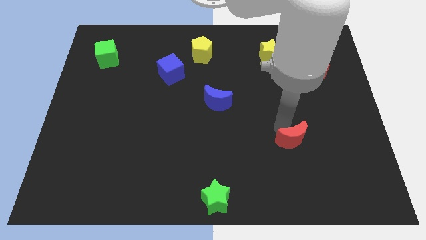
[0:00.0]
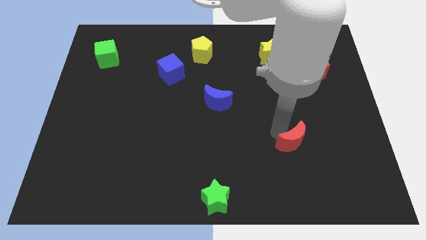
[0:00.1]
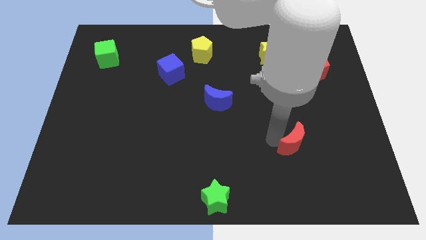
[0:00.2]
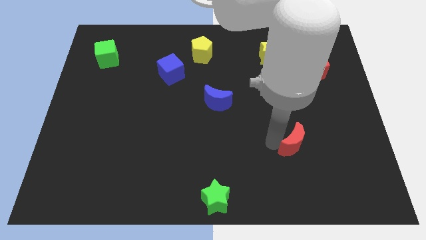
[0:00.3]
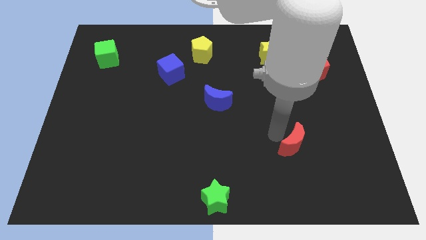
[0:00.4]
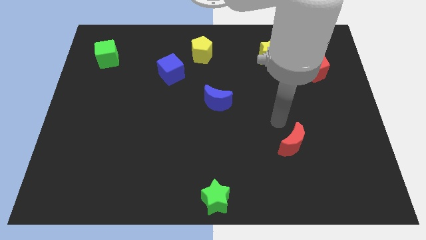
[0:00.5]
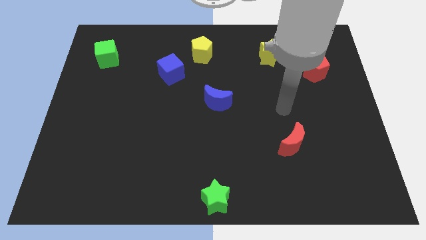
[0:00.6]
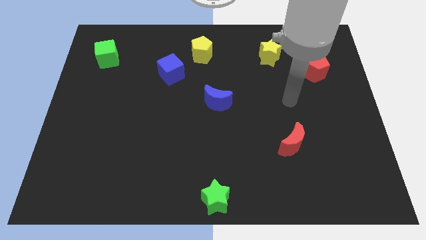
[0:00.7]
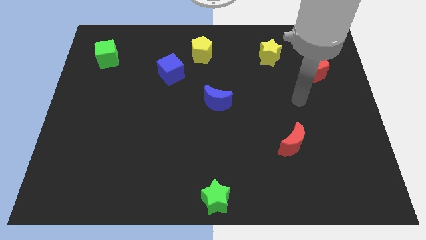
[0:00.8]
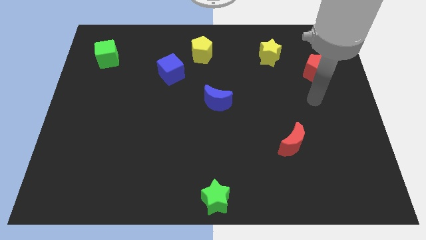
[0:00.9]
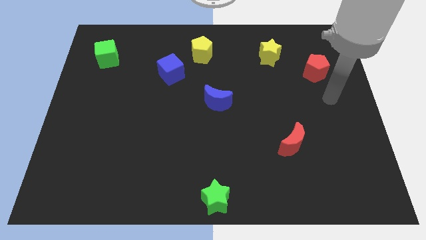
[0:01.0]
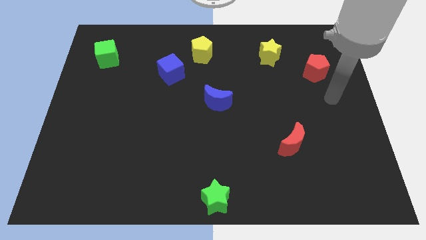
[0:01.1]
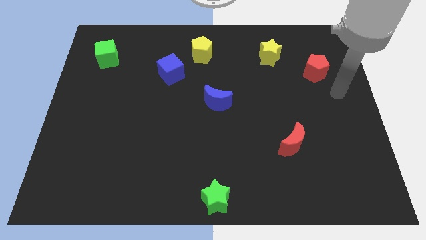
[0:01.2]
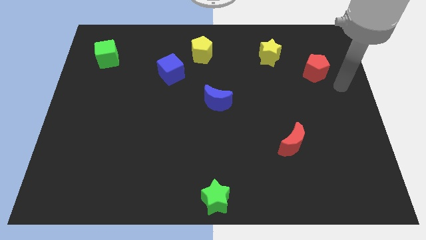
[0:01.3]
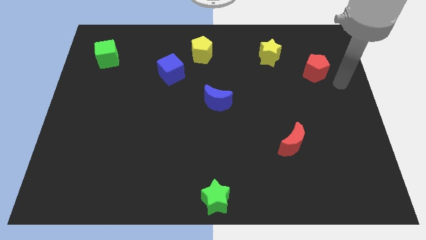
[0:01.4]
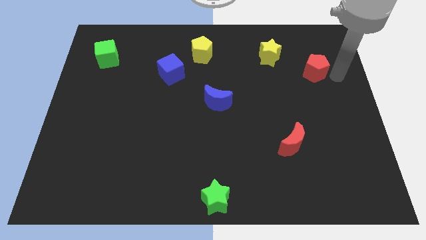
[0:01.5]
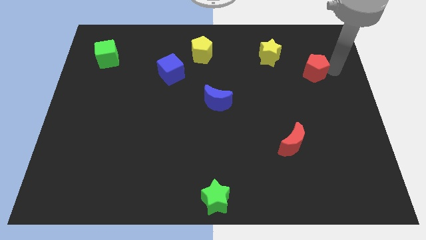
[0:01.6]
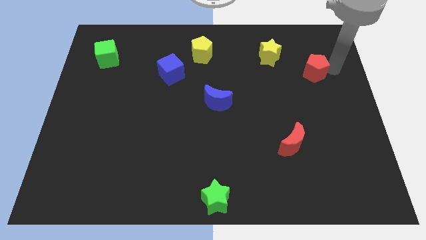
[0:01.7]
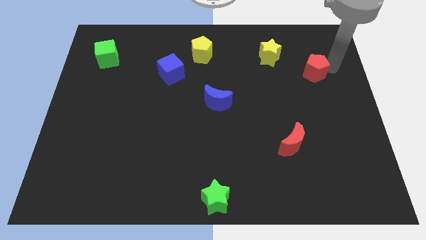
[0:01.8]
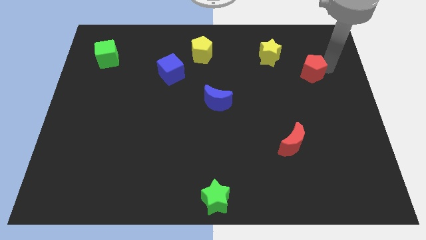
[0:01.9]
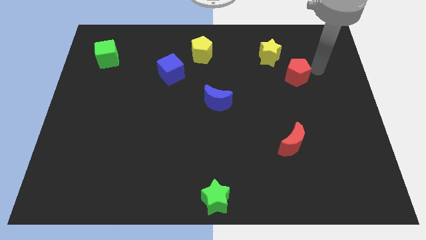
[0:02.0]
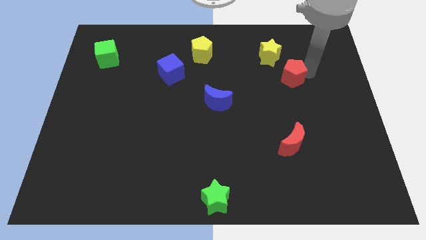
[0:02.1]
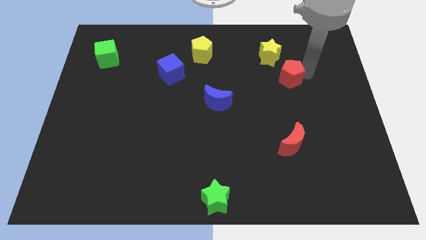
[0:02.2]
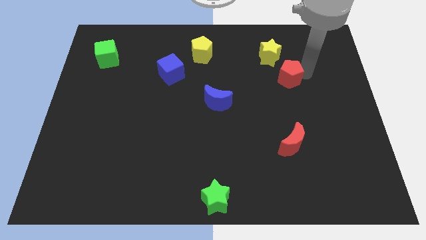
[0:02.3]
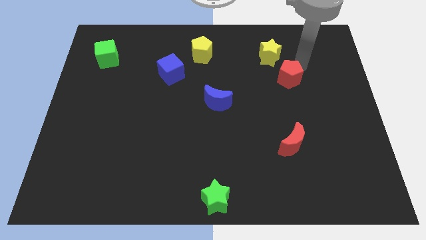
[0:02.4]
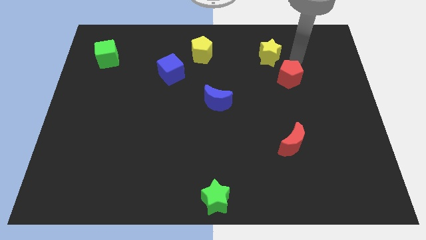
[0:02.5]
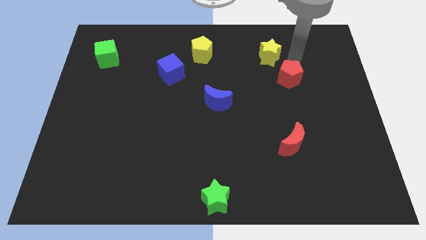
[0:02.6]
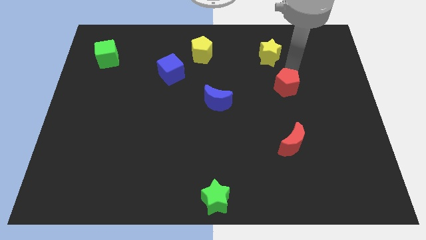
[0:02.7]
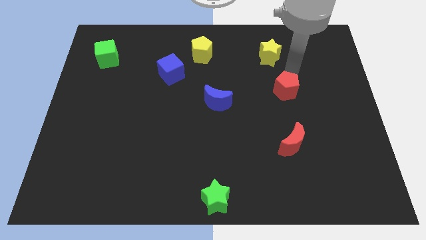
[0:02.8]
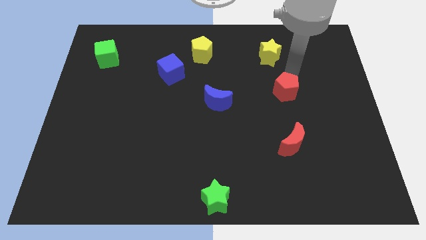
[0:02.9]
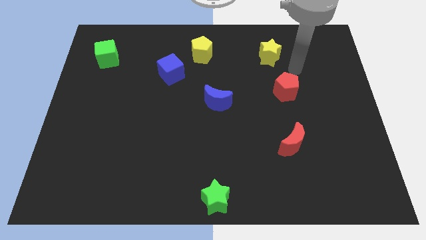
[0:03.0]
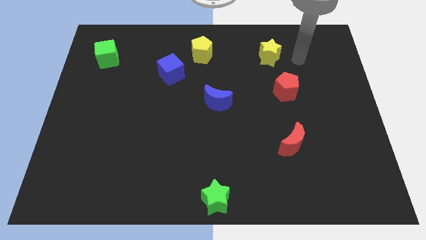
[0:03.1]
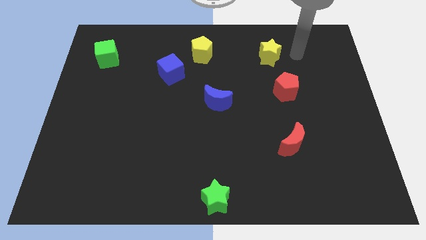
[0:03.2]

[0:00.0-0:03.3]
place the red pentagon to the top of the red moon

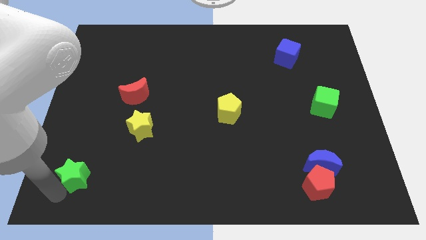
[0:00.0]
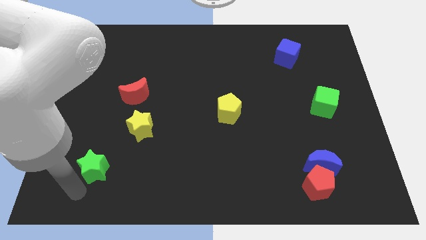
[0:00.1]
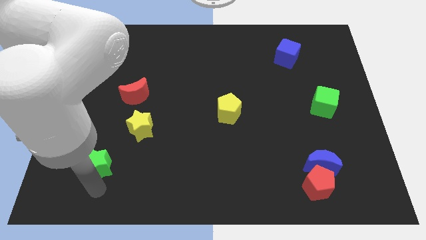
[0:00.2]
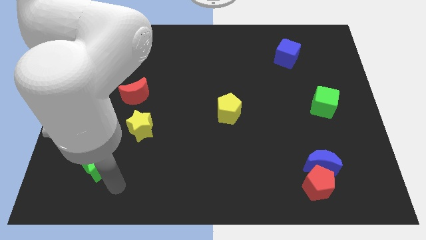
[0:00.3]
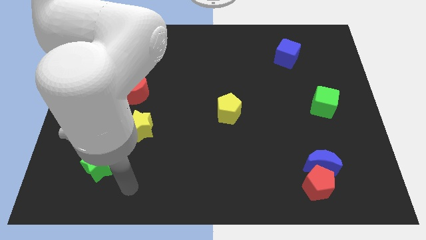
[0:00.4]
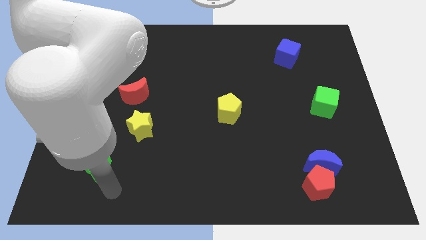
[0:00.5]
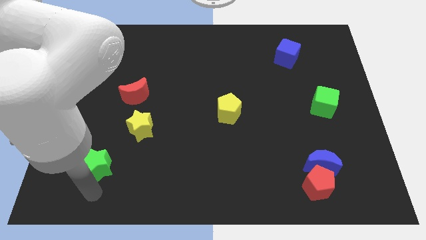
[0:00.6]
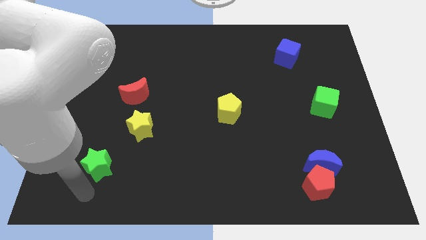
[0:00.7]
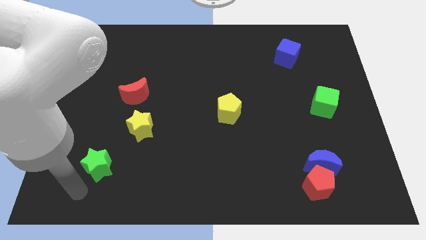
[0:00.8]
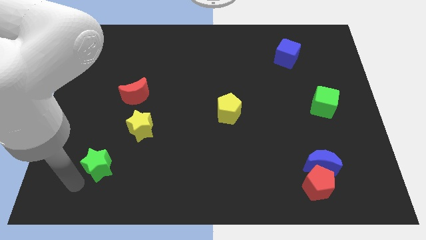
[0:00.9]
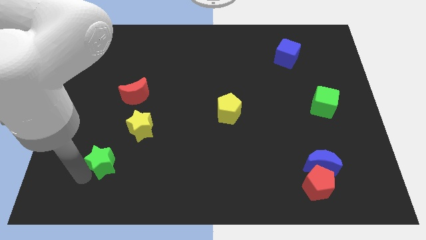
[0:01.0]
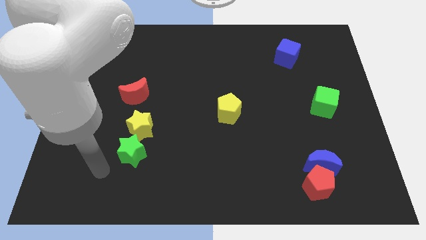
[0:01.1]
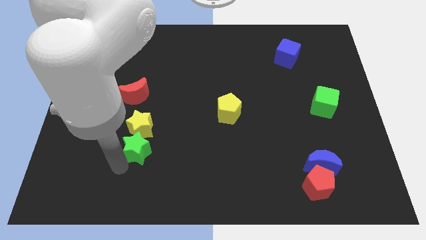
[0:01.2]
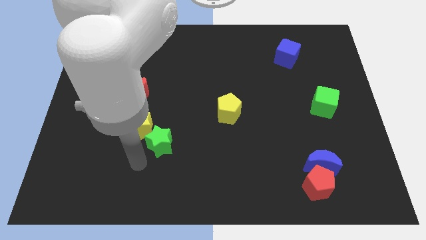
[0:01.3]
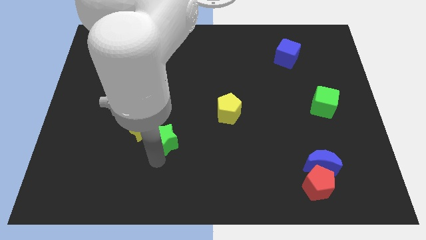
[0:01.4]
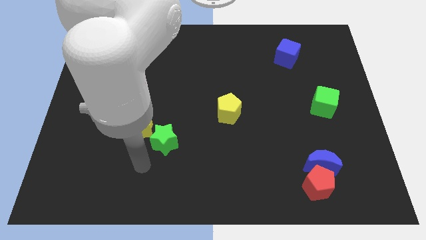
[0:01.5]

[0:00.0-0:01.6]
move the green star towards the yellow star

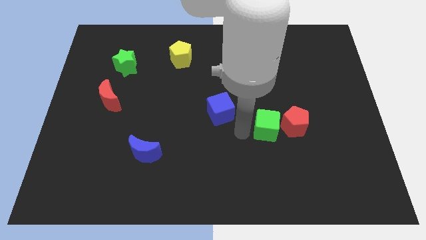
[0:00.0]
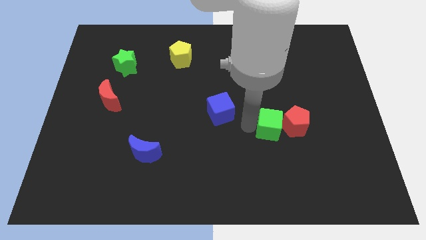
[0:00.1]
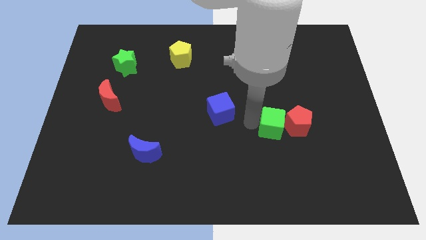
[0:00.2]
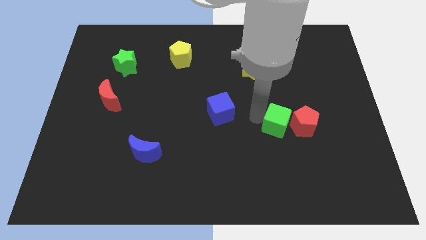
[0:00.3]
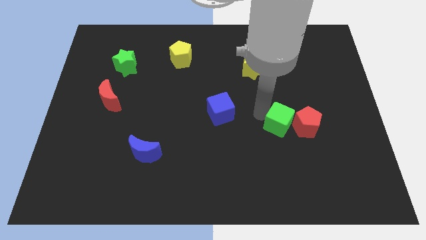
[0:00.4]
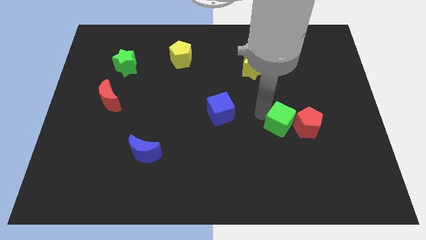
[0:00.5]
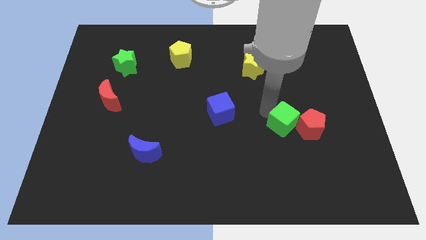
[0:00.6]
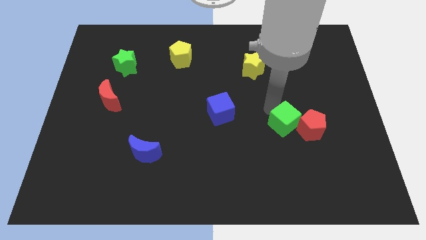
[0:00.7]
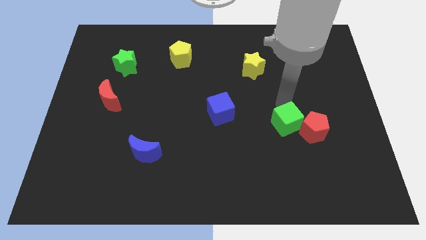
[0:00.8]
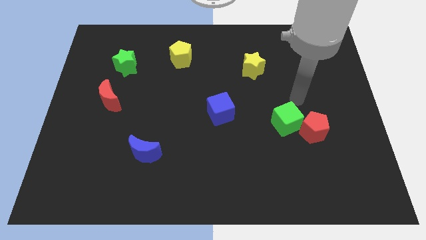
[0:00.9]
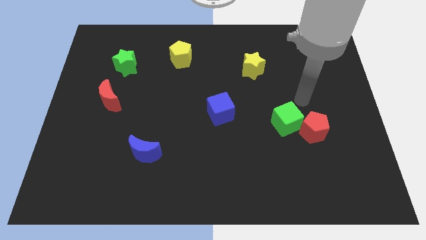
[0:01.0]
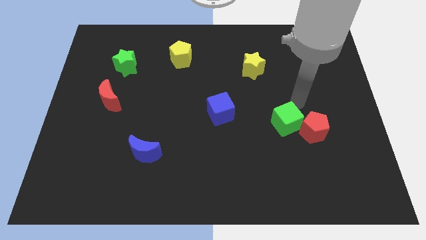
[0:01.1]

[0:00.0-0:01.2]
push the green cube into the red pentagon

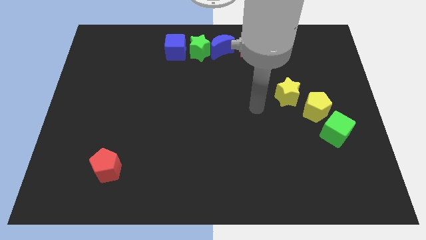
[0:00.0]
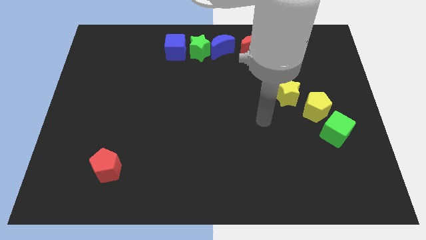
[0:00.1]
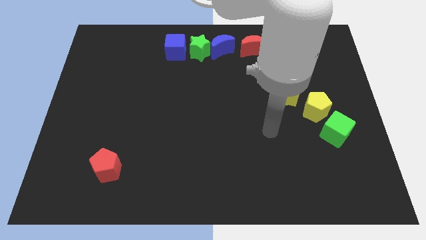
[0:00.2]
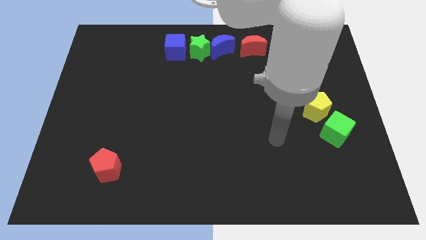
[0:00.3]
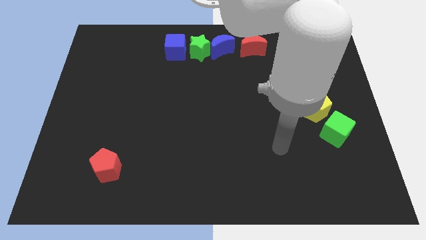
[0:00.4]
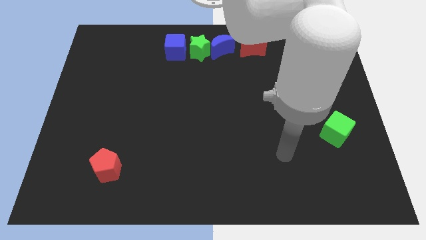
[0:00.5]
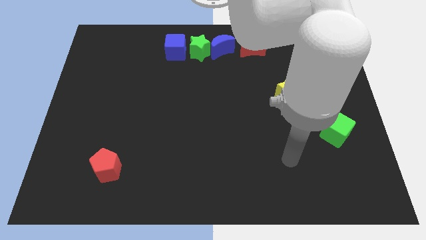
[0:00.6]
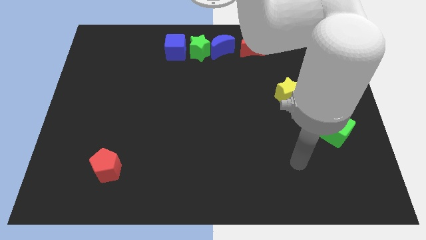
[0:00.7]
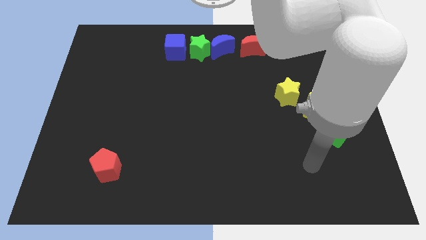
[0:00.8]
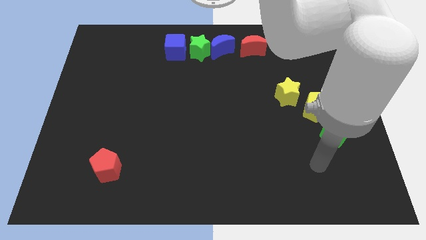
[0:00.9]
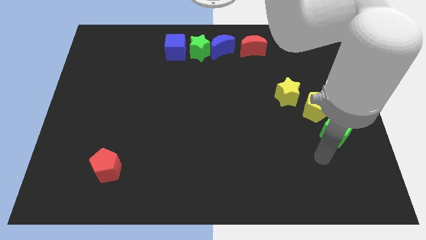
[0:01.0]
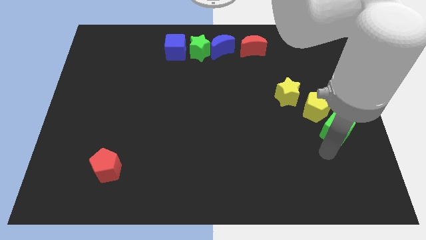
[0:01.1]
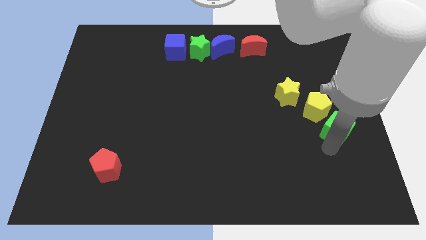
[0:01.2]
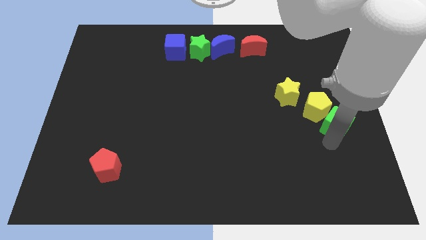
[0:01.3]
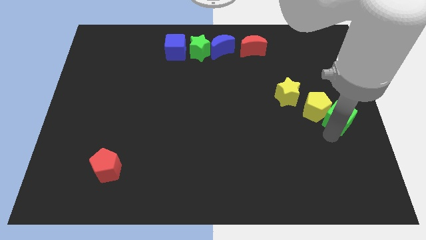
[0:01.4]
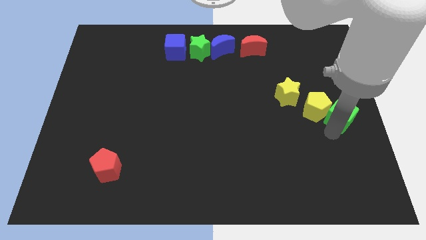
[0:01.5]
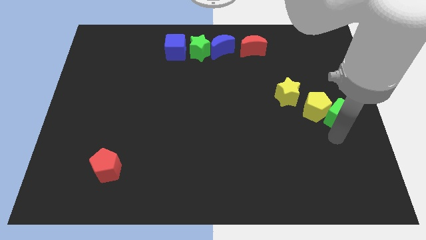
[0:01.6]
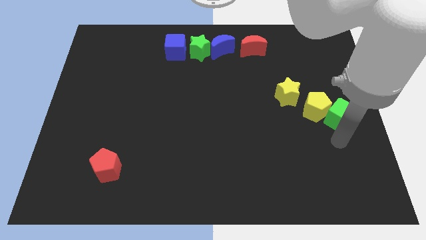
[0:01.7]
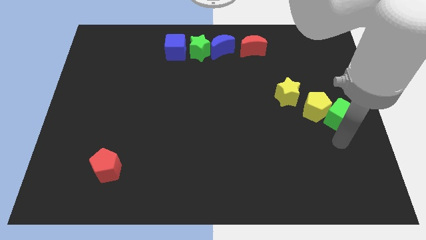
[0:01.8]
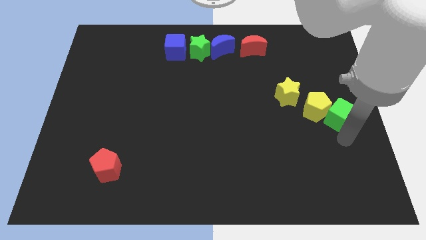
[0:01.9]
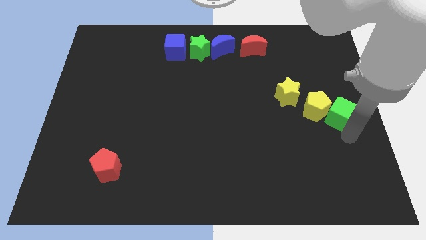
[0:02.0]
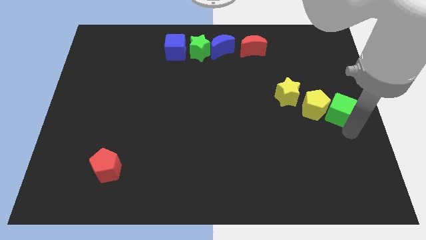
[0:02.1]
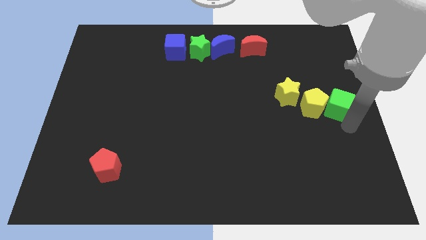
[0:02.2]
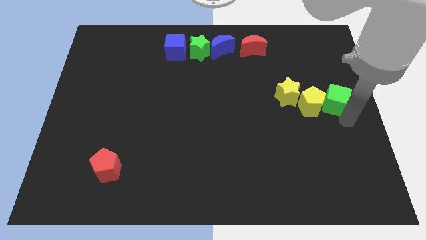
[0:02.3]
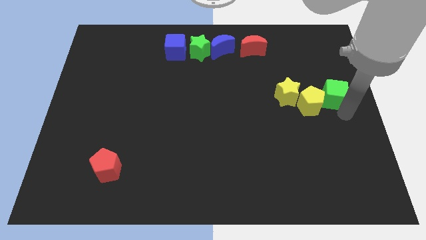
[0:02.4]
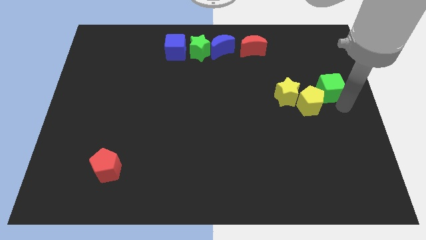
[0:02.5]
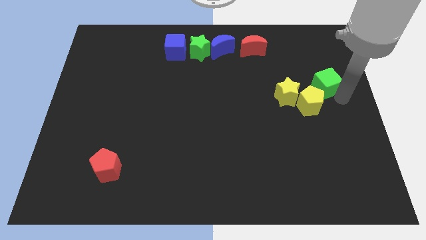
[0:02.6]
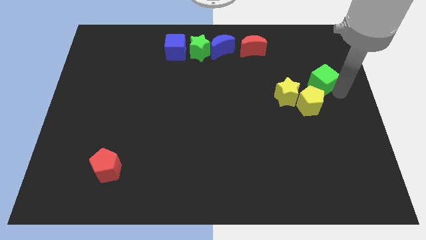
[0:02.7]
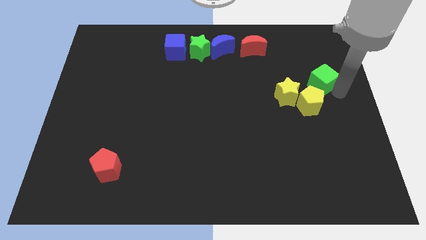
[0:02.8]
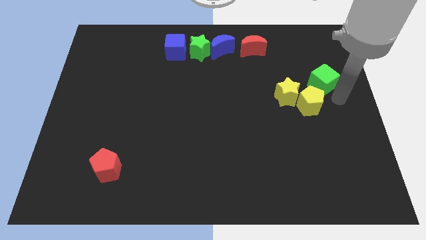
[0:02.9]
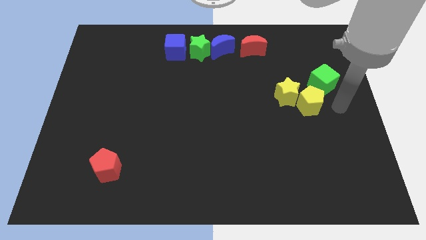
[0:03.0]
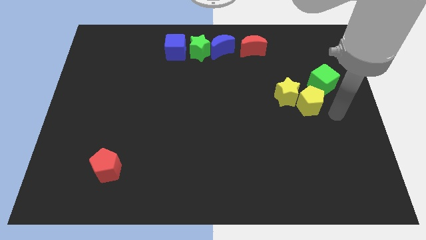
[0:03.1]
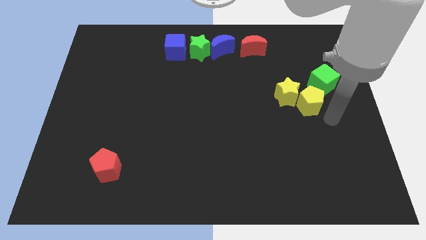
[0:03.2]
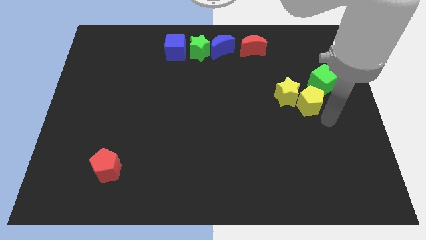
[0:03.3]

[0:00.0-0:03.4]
place green cube to the top right of the yellow pentagon
